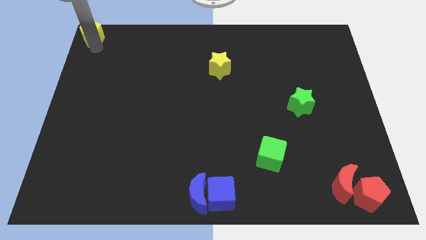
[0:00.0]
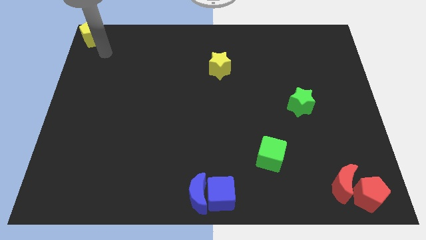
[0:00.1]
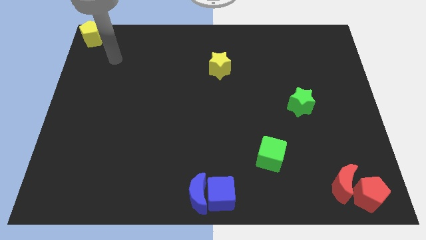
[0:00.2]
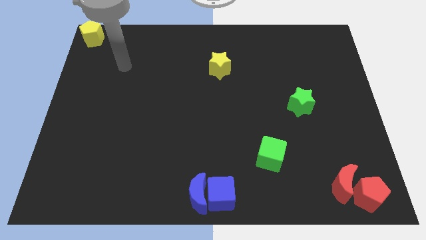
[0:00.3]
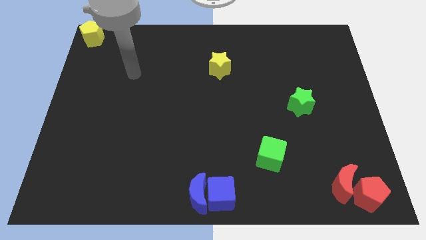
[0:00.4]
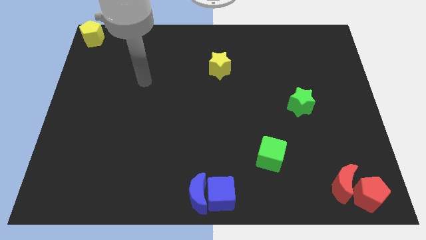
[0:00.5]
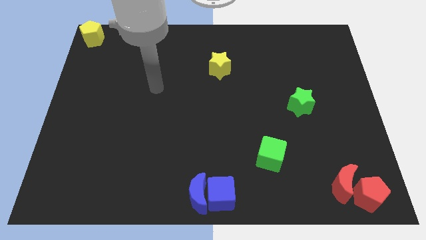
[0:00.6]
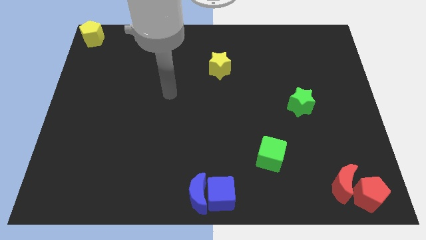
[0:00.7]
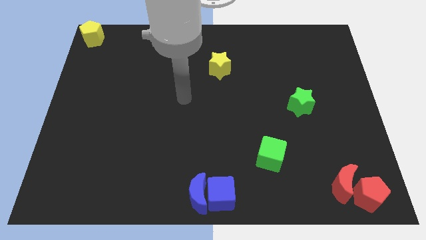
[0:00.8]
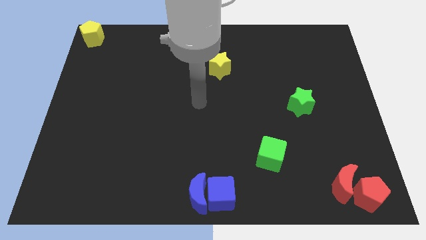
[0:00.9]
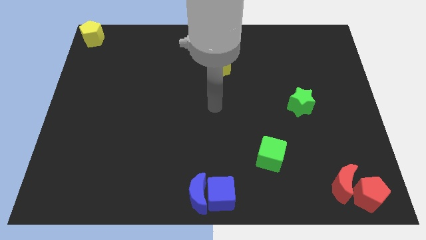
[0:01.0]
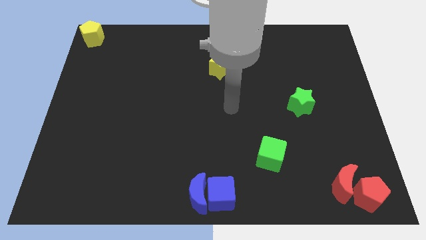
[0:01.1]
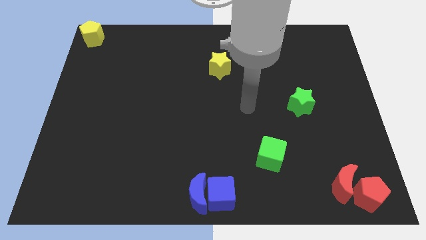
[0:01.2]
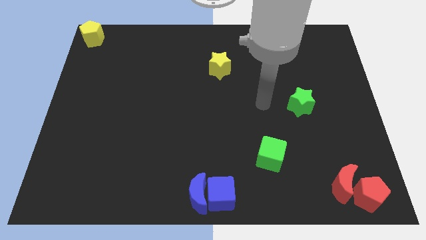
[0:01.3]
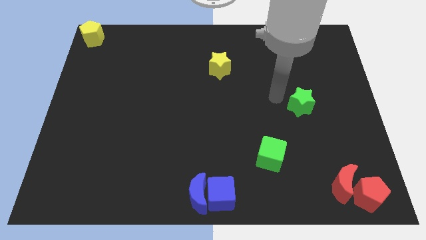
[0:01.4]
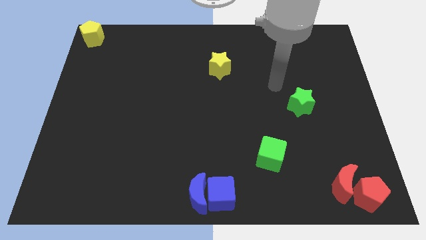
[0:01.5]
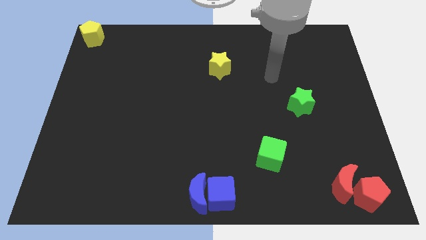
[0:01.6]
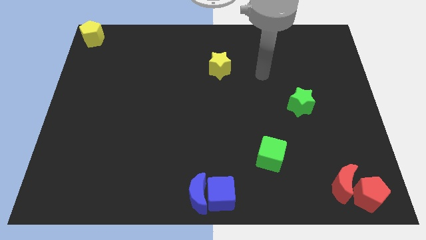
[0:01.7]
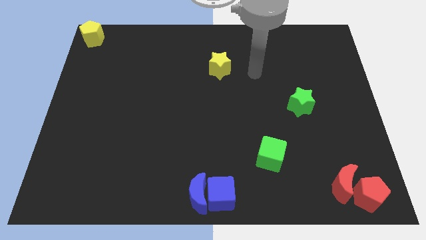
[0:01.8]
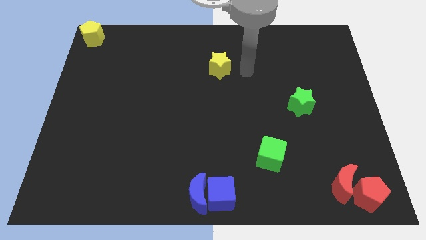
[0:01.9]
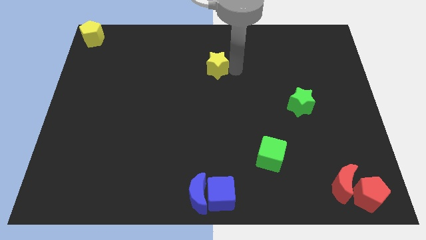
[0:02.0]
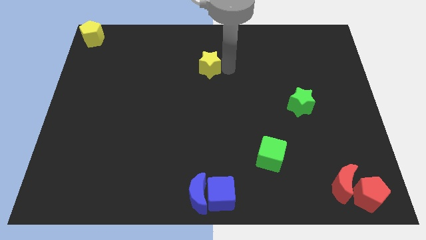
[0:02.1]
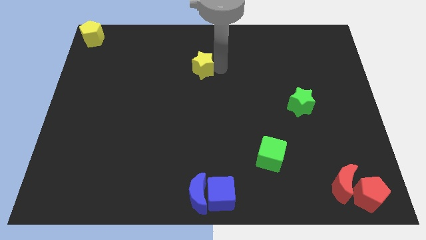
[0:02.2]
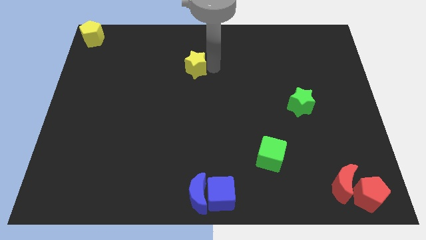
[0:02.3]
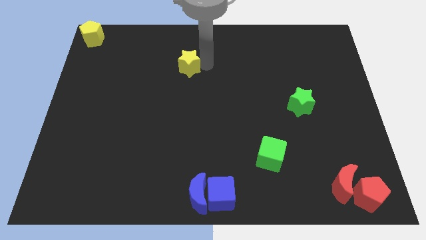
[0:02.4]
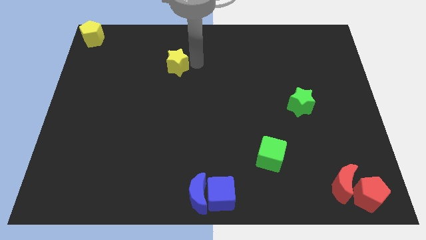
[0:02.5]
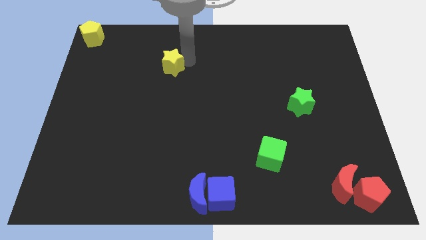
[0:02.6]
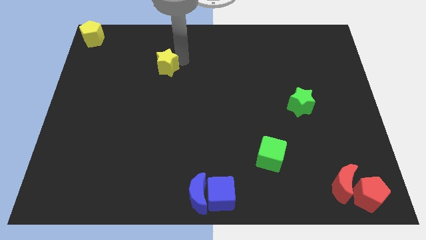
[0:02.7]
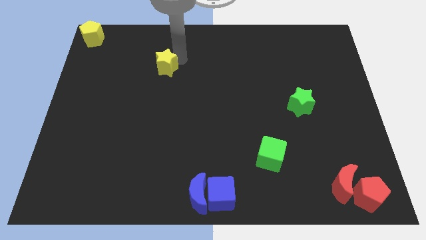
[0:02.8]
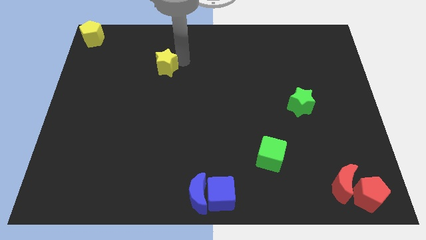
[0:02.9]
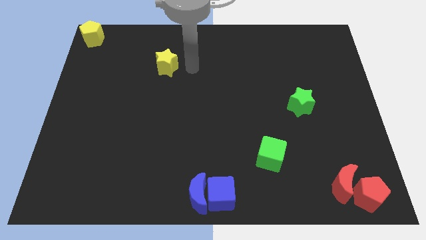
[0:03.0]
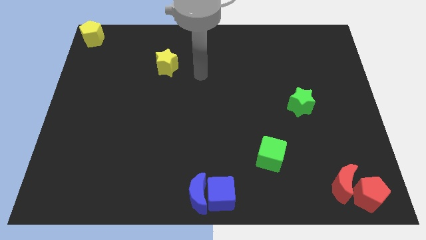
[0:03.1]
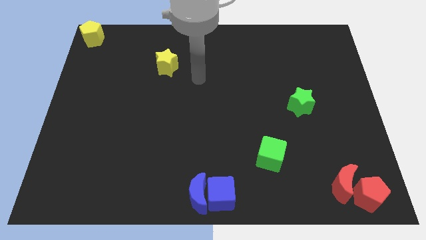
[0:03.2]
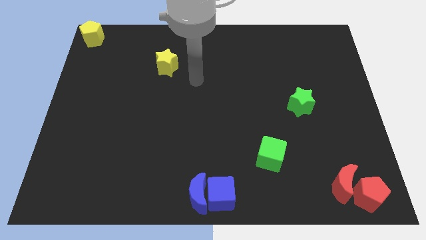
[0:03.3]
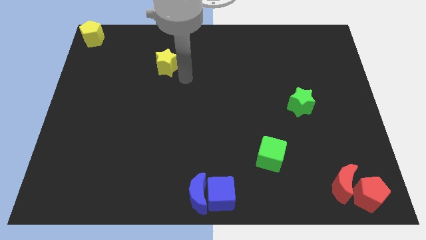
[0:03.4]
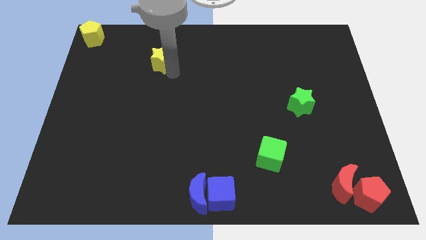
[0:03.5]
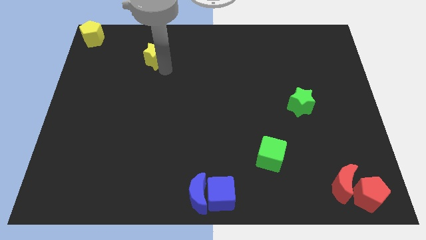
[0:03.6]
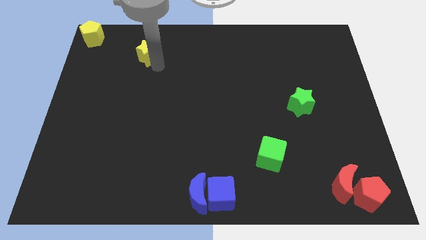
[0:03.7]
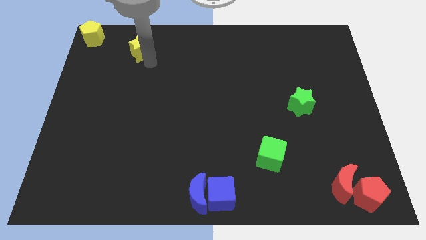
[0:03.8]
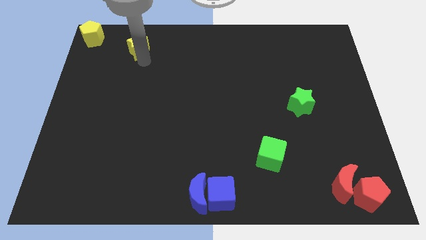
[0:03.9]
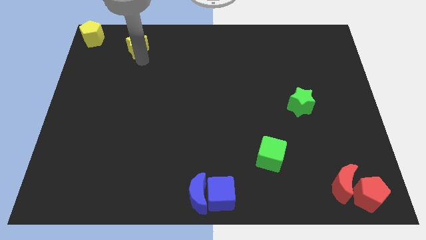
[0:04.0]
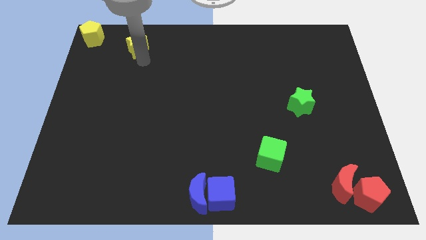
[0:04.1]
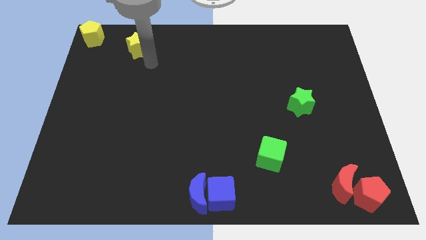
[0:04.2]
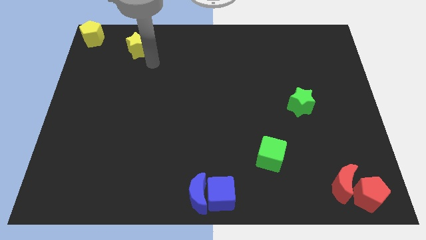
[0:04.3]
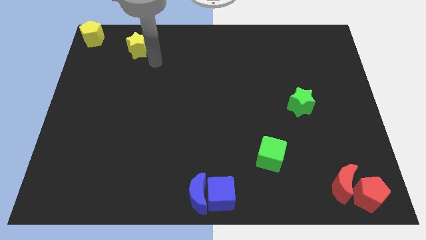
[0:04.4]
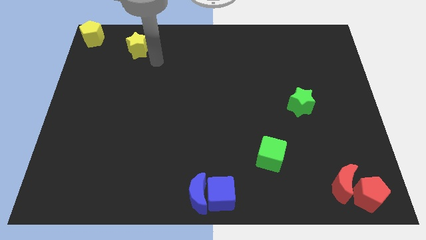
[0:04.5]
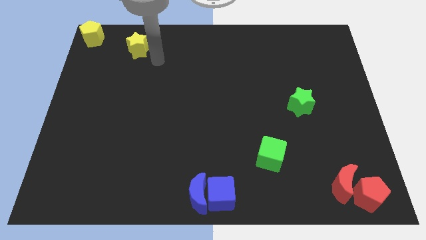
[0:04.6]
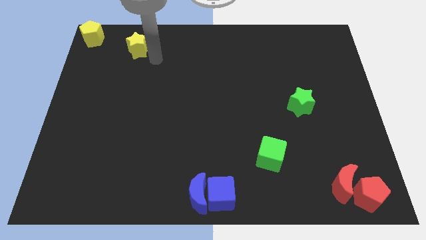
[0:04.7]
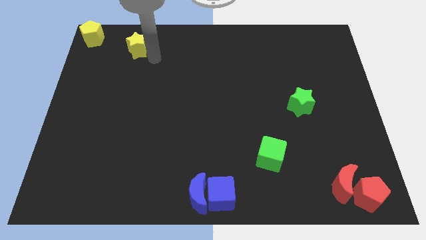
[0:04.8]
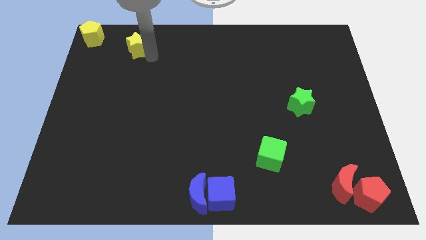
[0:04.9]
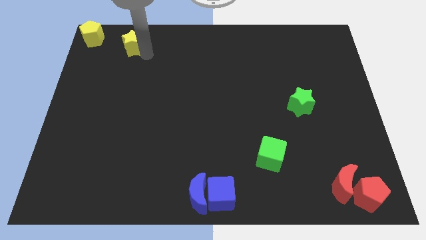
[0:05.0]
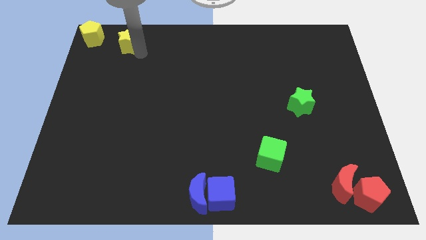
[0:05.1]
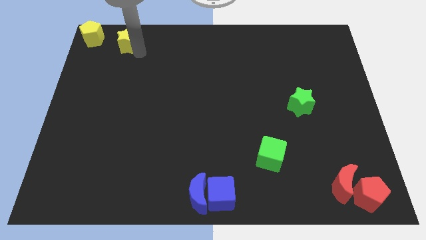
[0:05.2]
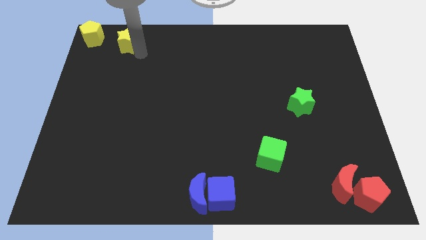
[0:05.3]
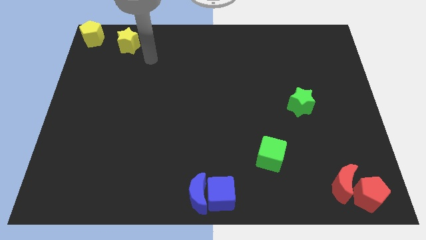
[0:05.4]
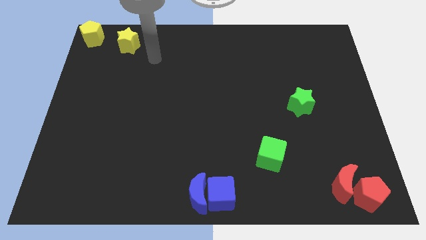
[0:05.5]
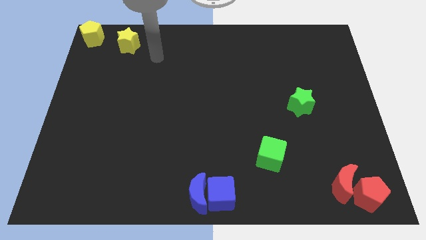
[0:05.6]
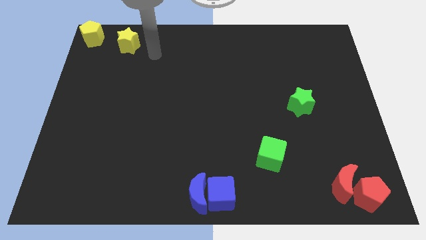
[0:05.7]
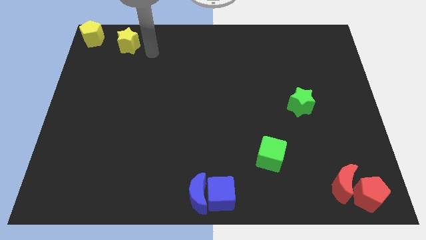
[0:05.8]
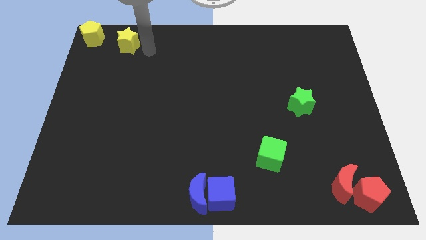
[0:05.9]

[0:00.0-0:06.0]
move yellow star towards yellow pentagon

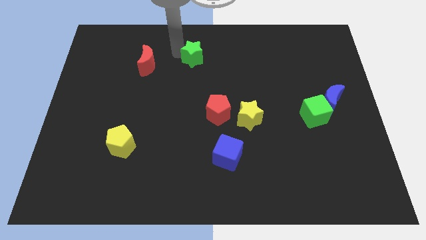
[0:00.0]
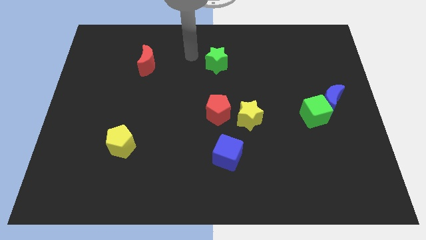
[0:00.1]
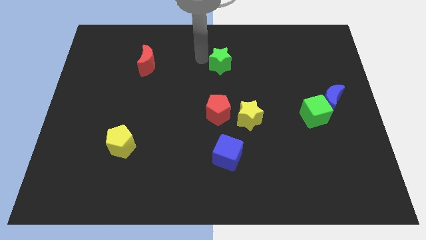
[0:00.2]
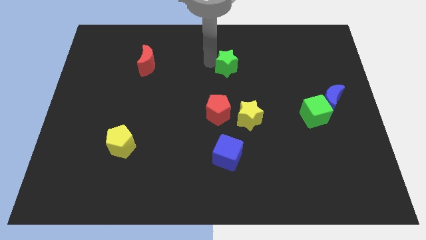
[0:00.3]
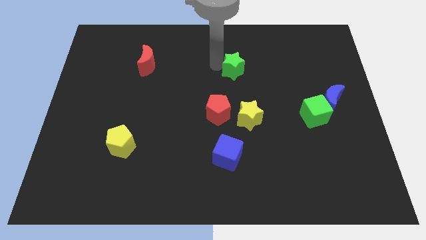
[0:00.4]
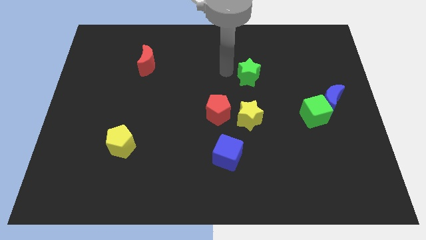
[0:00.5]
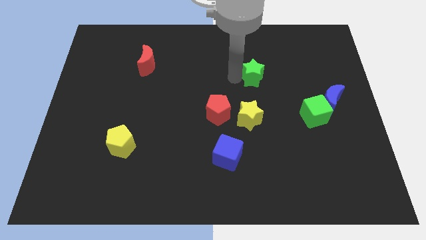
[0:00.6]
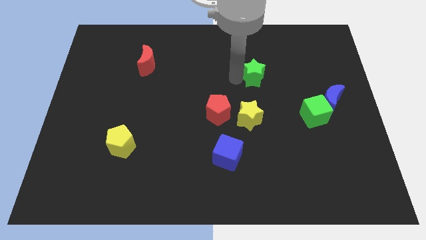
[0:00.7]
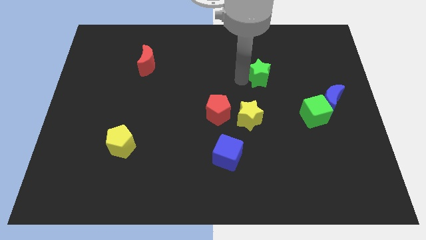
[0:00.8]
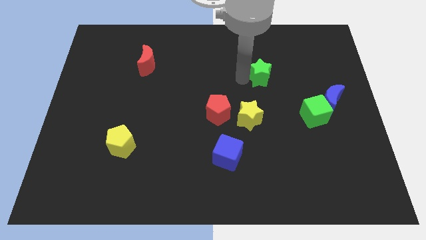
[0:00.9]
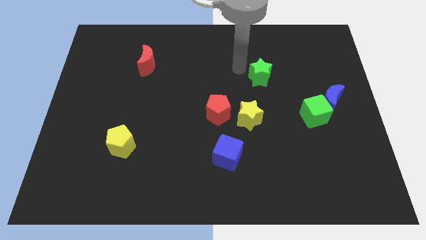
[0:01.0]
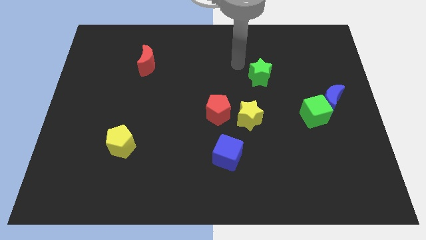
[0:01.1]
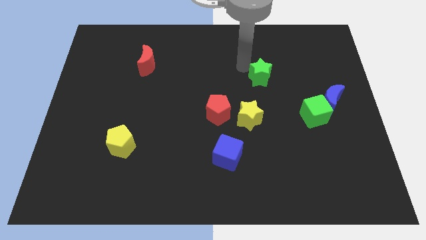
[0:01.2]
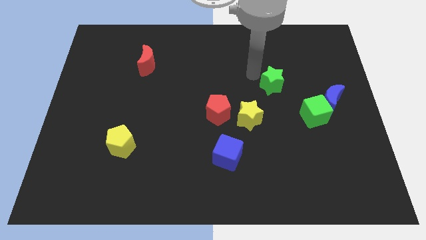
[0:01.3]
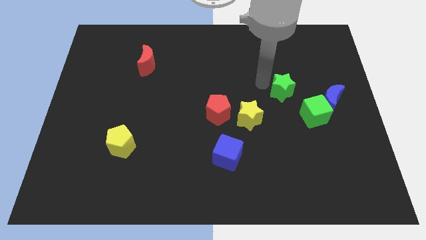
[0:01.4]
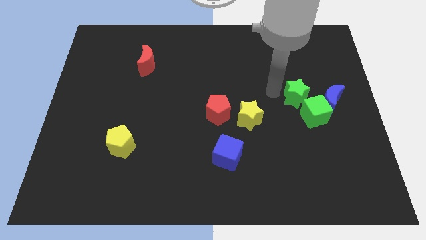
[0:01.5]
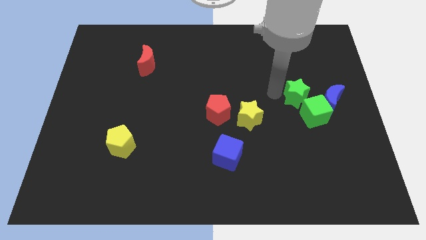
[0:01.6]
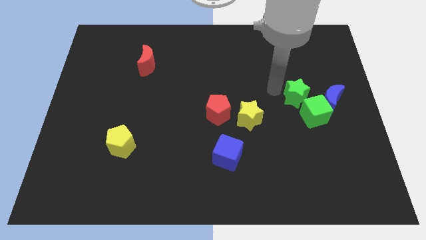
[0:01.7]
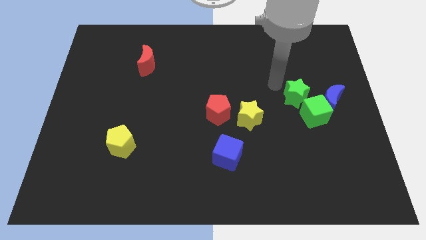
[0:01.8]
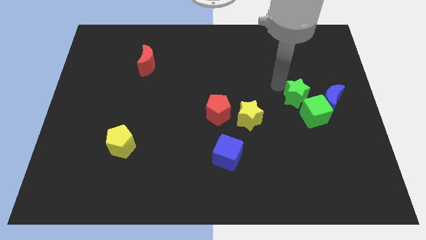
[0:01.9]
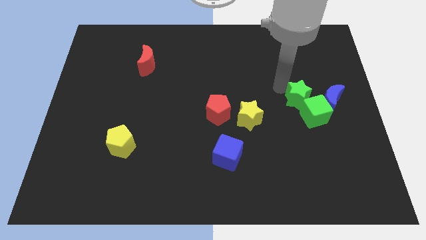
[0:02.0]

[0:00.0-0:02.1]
move the green star near to the green cube

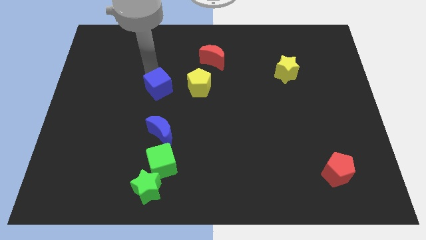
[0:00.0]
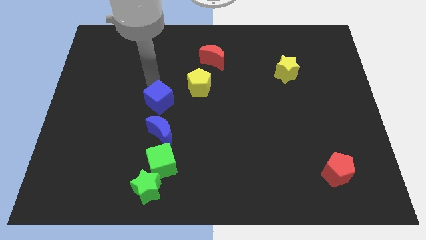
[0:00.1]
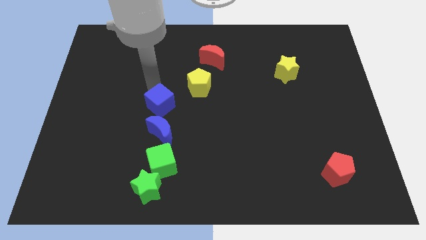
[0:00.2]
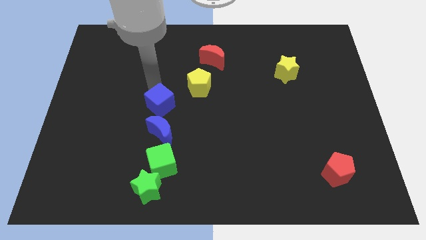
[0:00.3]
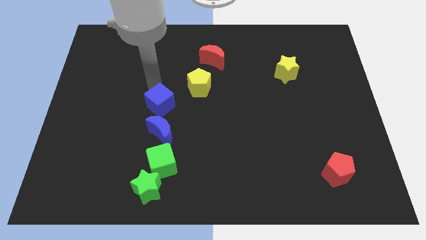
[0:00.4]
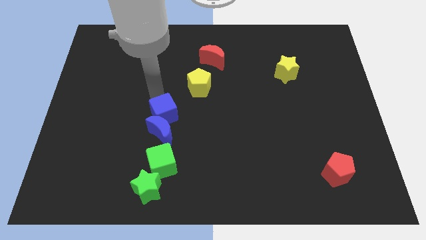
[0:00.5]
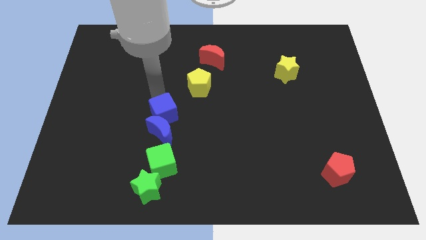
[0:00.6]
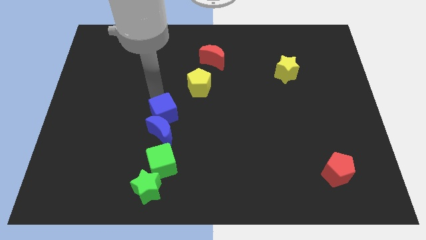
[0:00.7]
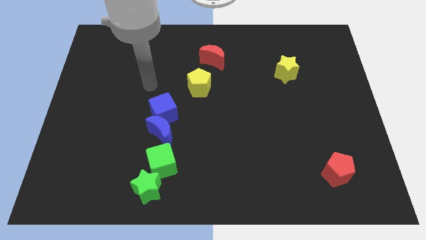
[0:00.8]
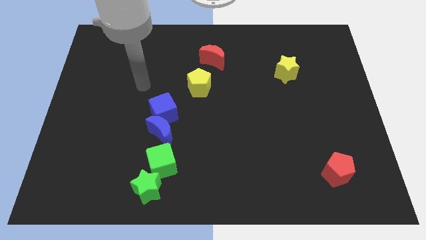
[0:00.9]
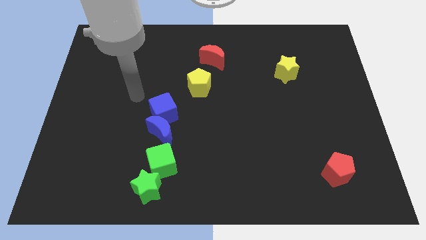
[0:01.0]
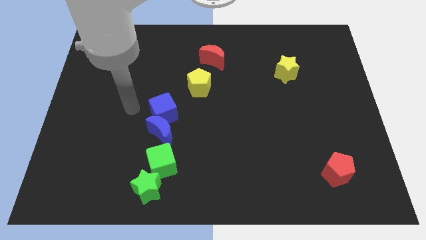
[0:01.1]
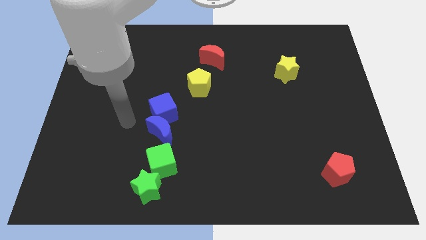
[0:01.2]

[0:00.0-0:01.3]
place the blue cube above the blue crescent
